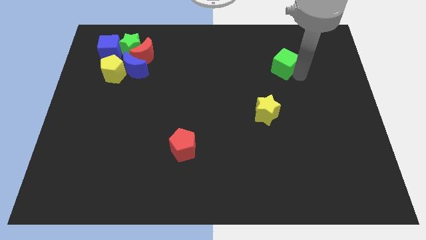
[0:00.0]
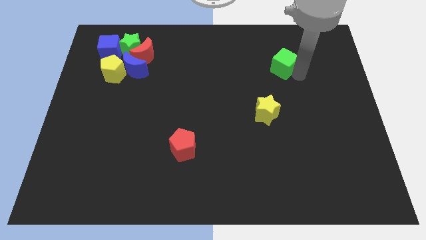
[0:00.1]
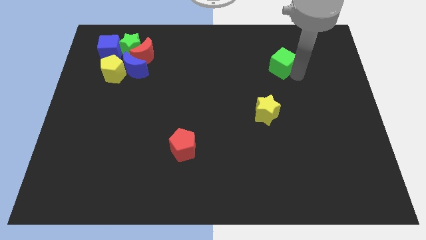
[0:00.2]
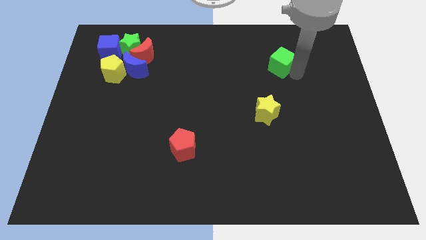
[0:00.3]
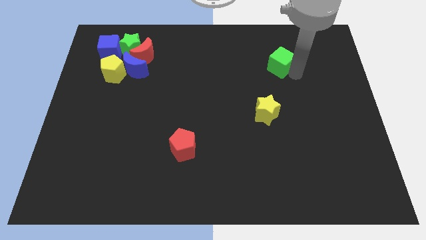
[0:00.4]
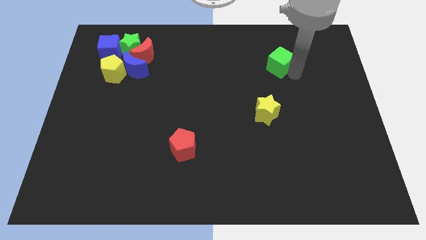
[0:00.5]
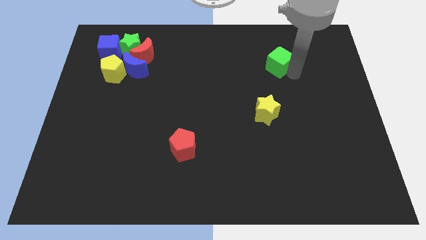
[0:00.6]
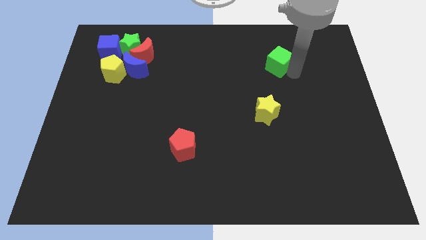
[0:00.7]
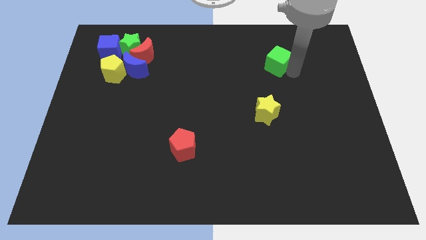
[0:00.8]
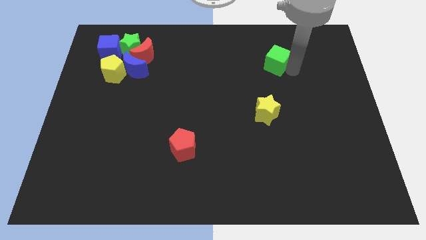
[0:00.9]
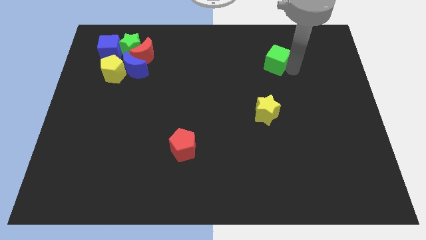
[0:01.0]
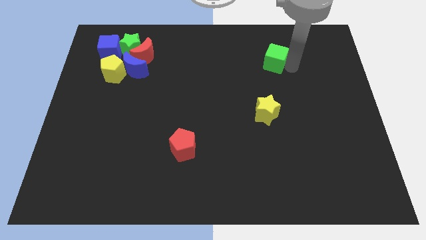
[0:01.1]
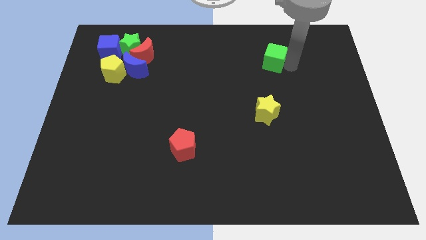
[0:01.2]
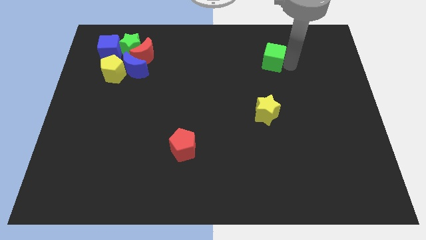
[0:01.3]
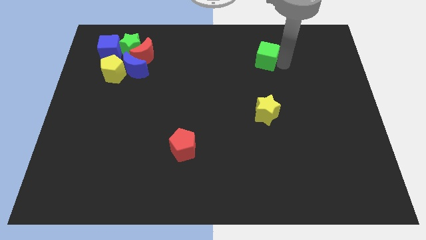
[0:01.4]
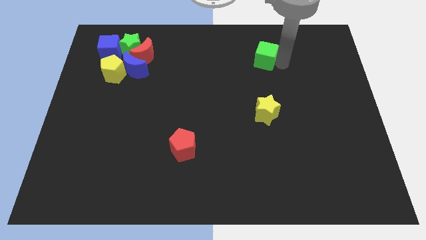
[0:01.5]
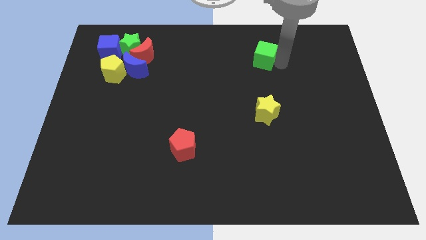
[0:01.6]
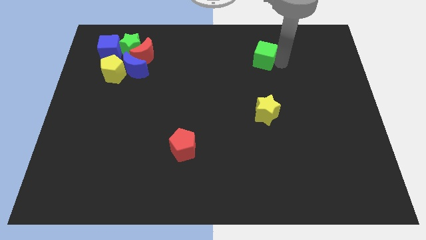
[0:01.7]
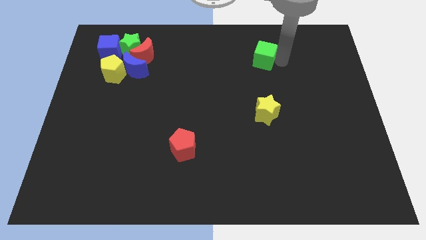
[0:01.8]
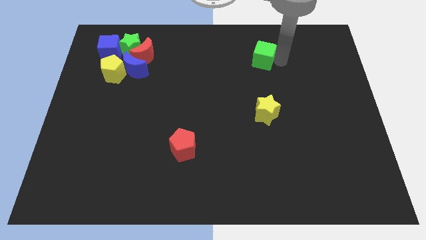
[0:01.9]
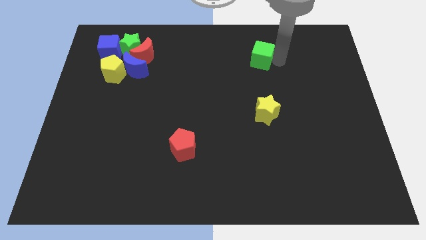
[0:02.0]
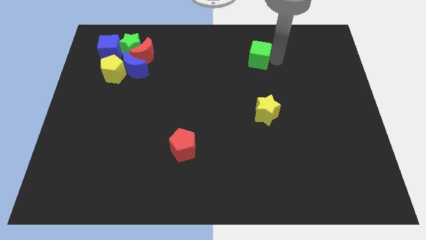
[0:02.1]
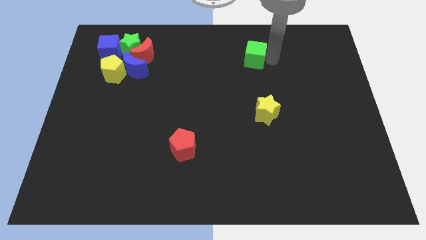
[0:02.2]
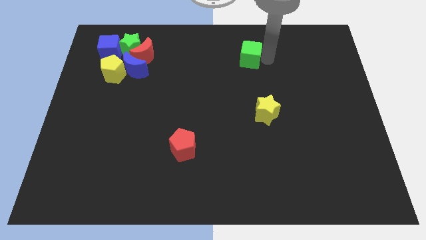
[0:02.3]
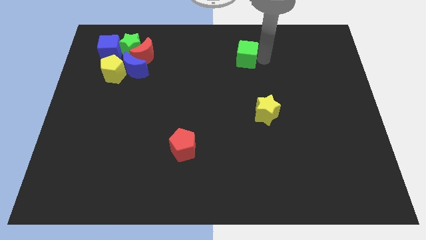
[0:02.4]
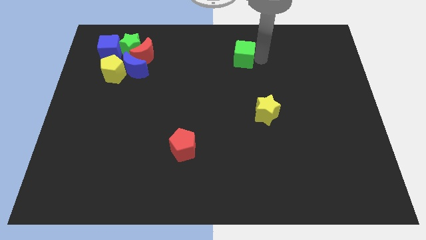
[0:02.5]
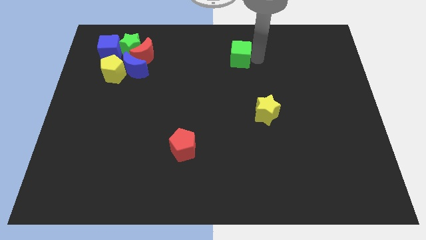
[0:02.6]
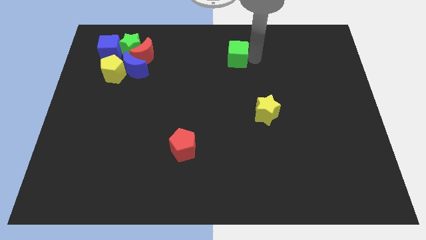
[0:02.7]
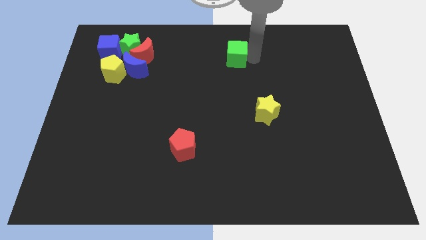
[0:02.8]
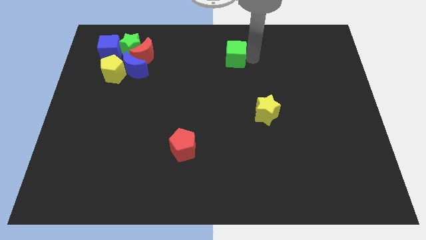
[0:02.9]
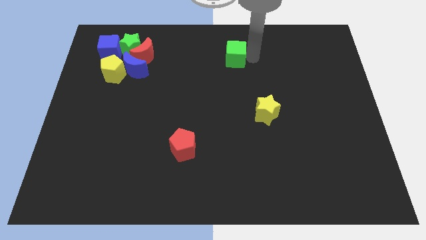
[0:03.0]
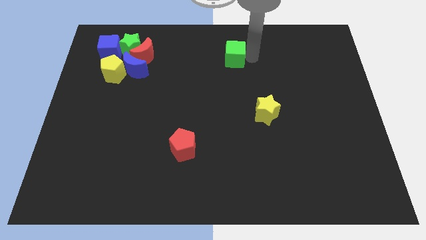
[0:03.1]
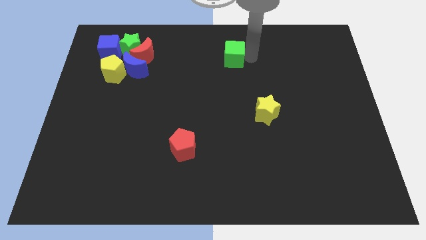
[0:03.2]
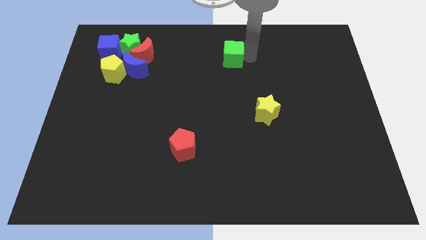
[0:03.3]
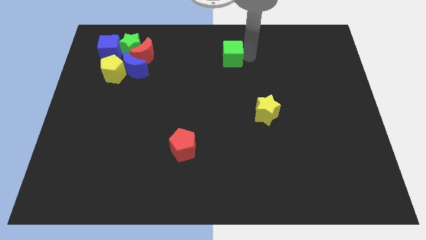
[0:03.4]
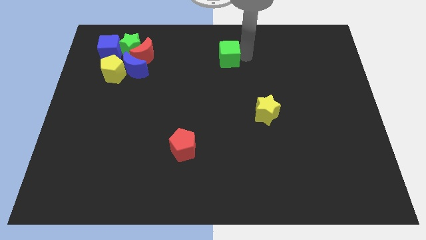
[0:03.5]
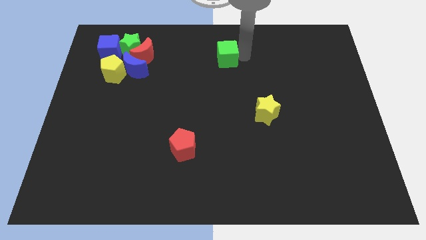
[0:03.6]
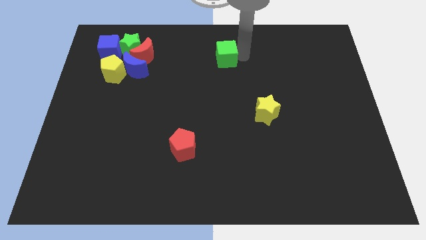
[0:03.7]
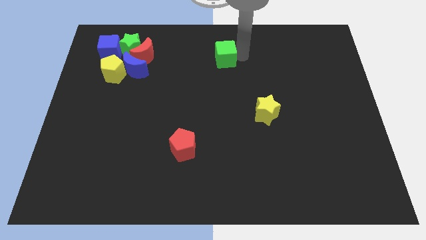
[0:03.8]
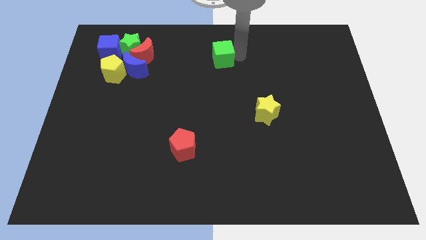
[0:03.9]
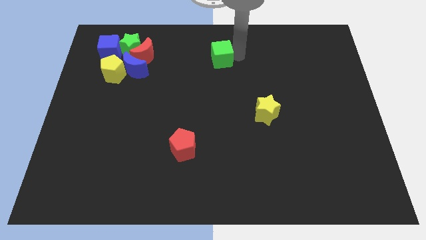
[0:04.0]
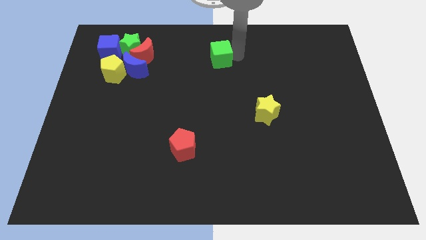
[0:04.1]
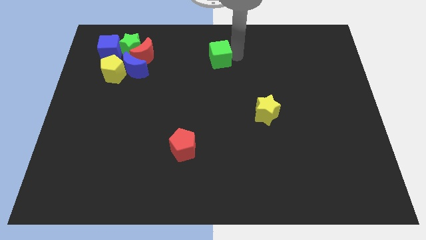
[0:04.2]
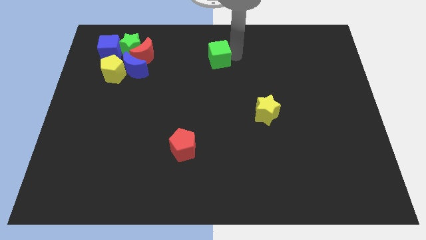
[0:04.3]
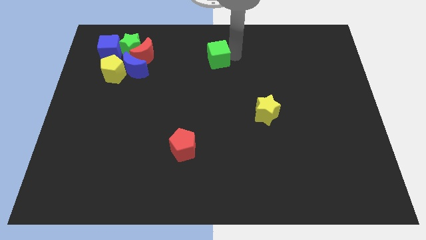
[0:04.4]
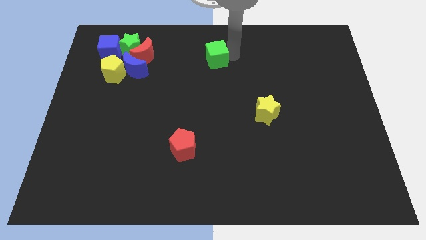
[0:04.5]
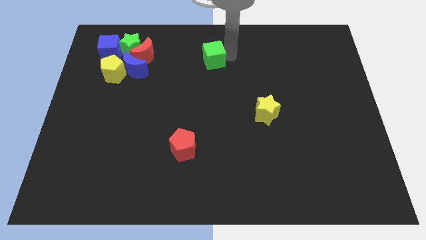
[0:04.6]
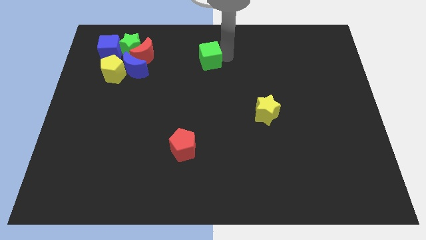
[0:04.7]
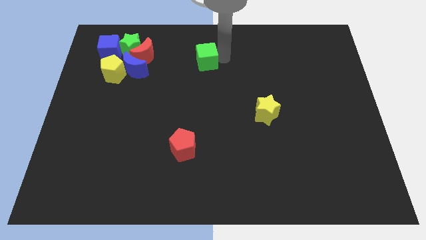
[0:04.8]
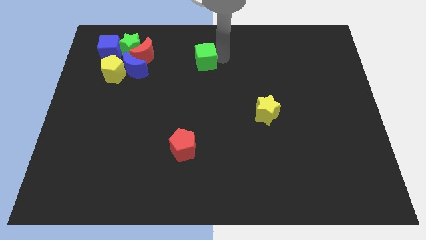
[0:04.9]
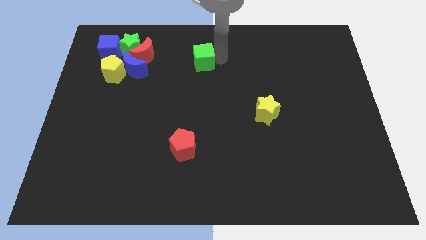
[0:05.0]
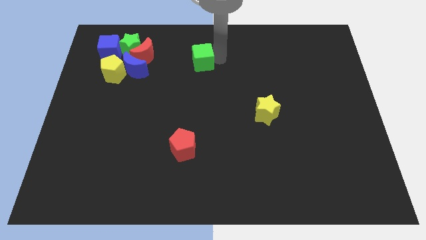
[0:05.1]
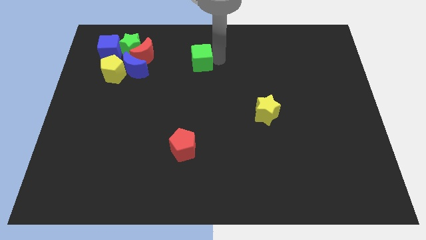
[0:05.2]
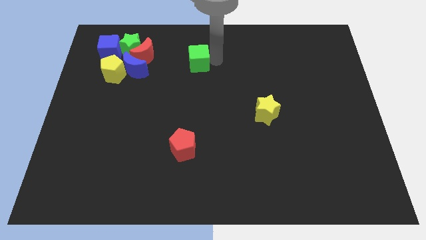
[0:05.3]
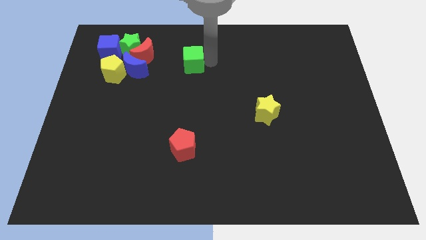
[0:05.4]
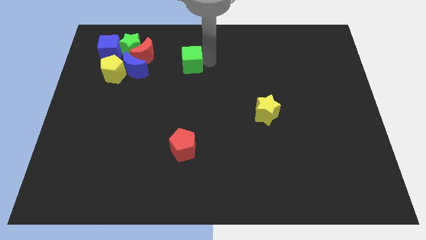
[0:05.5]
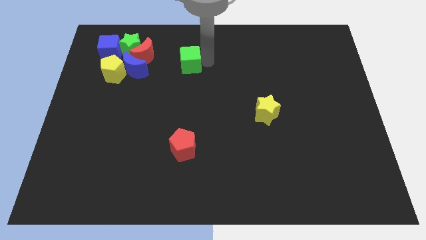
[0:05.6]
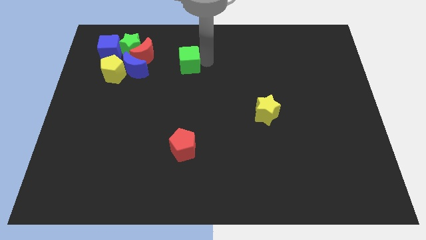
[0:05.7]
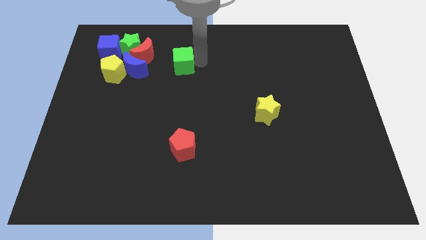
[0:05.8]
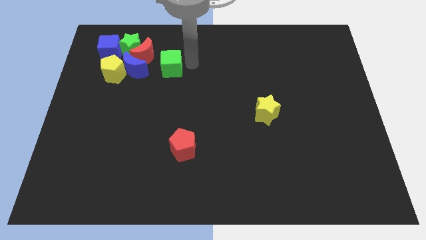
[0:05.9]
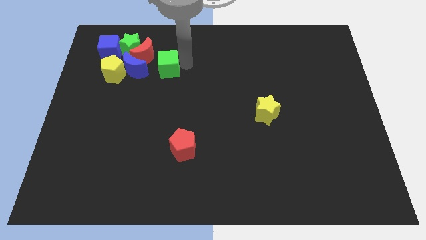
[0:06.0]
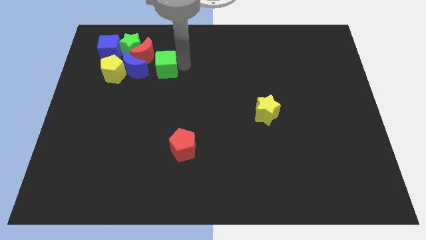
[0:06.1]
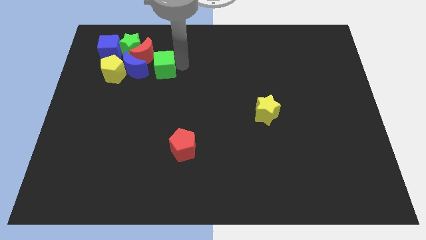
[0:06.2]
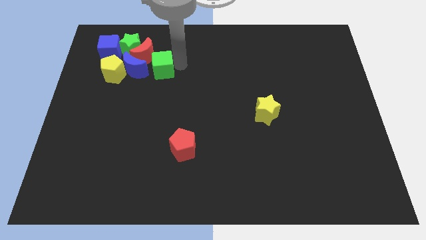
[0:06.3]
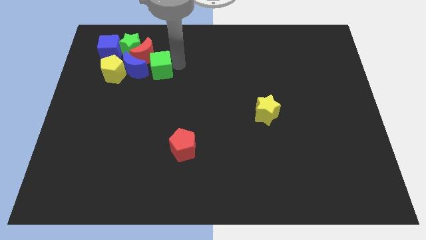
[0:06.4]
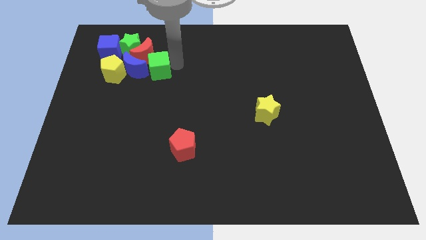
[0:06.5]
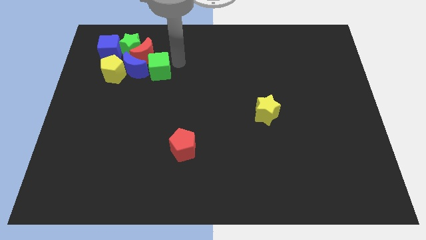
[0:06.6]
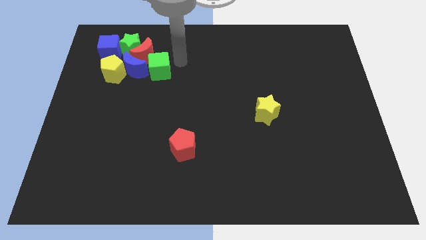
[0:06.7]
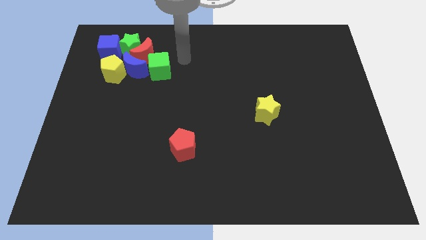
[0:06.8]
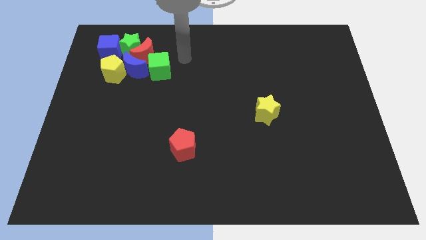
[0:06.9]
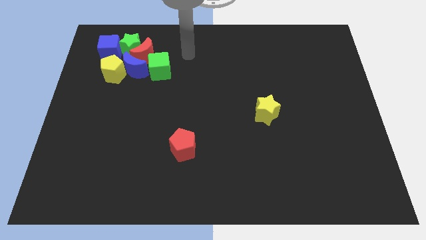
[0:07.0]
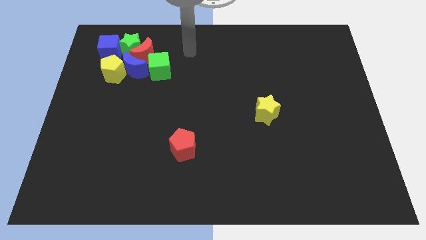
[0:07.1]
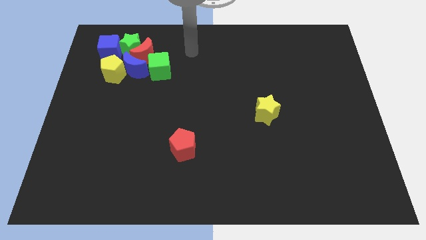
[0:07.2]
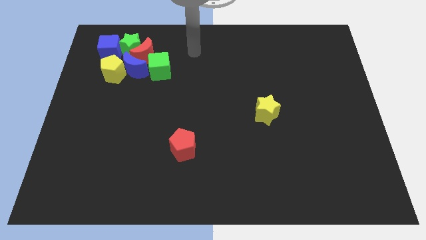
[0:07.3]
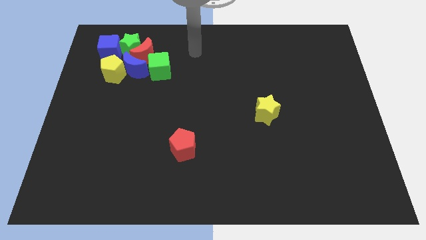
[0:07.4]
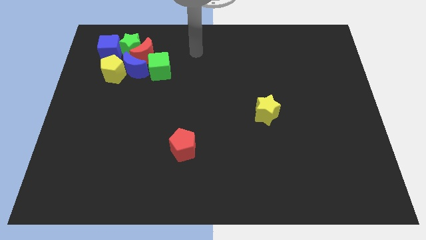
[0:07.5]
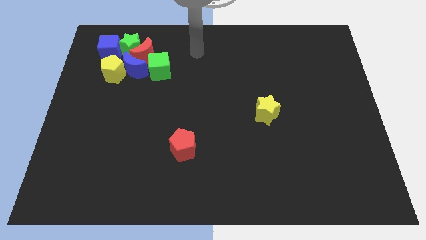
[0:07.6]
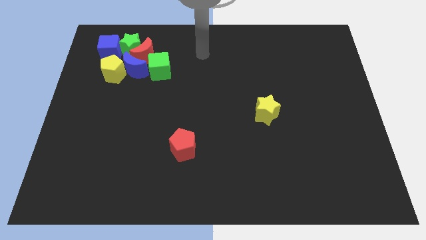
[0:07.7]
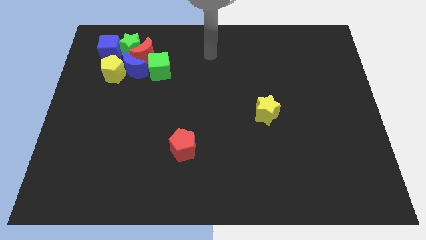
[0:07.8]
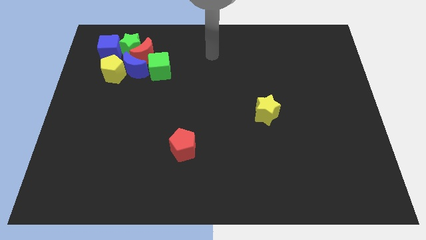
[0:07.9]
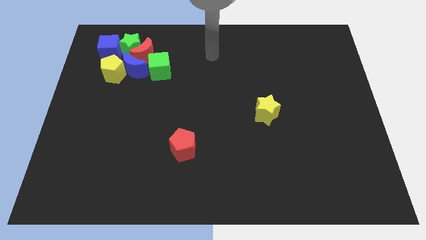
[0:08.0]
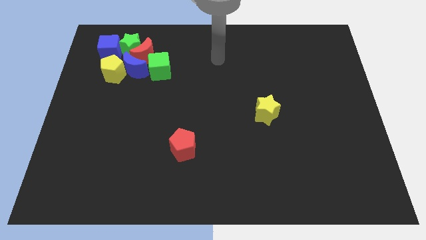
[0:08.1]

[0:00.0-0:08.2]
push the green cube into the group of blocks

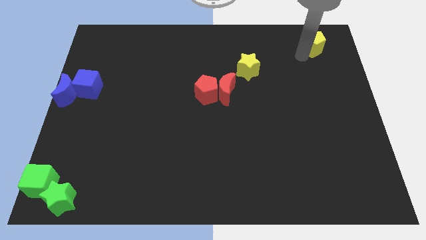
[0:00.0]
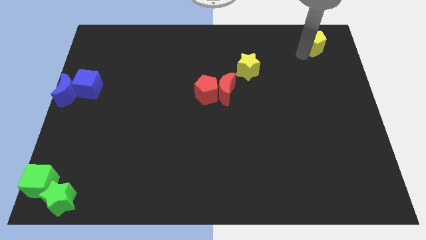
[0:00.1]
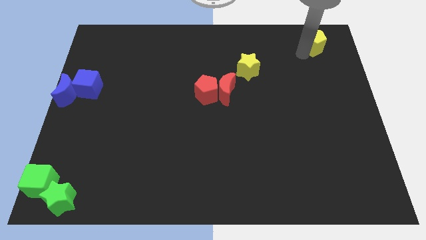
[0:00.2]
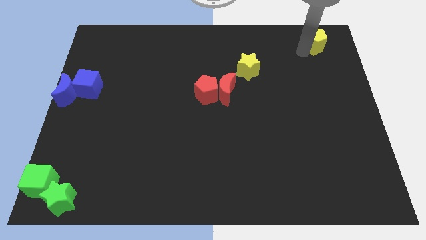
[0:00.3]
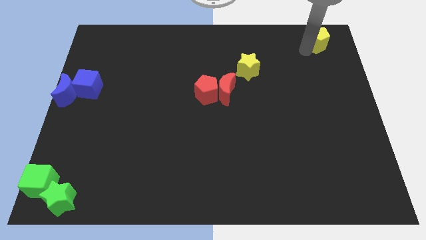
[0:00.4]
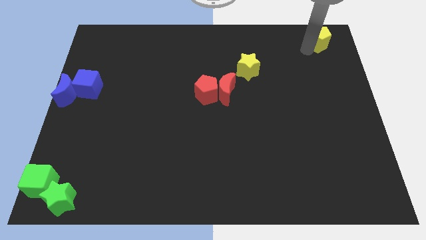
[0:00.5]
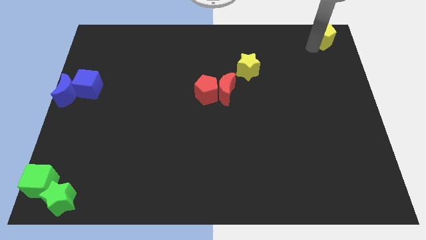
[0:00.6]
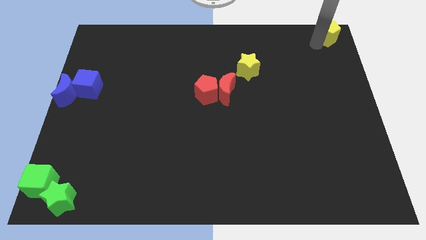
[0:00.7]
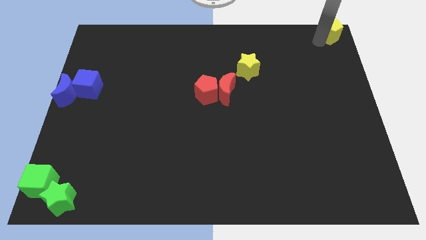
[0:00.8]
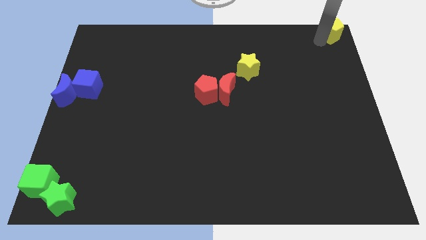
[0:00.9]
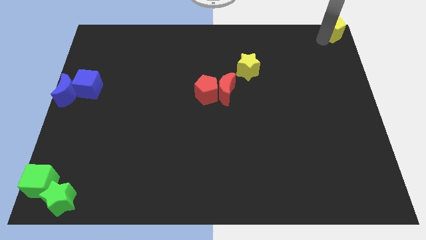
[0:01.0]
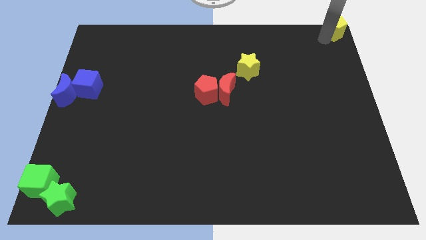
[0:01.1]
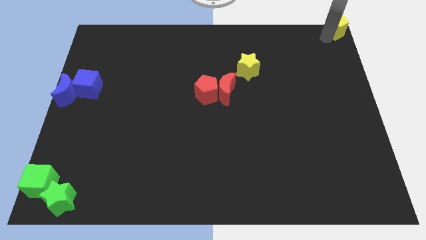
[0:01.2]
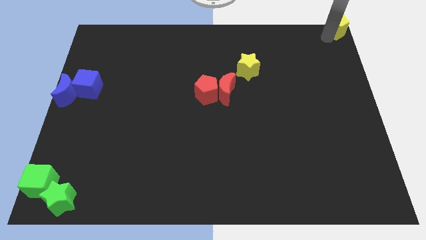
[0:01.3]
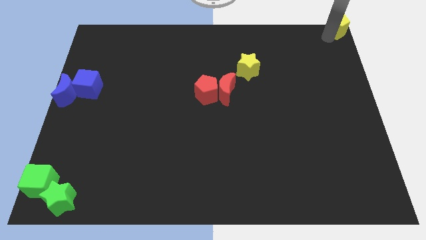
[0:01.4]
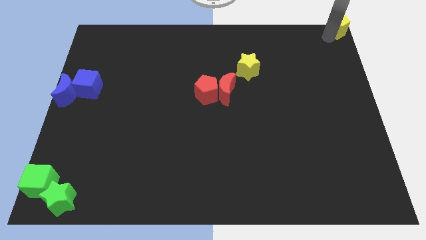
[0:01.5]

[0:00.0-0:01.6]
push yellow pentagon to top right corner
